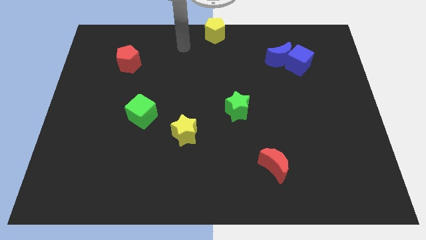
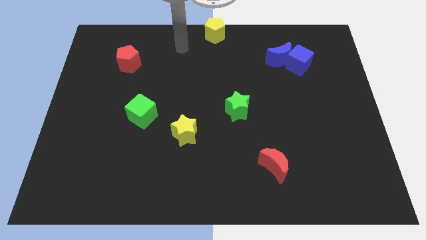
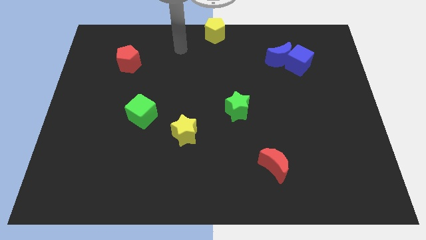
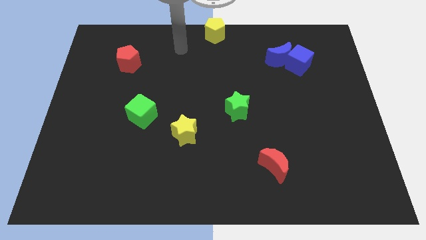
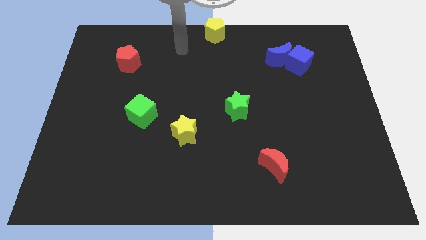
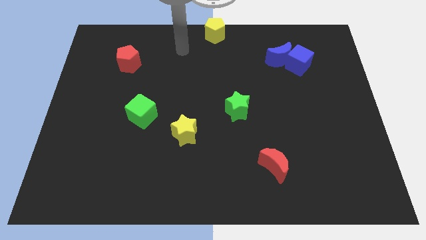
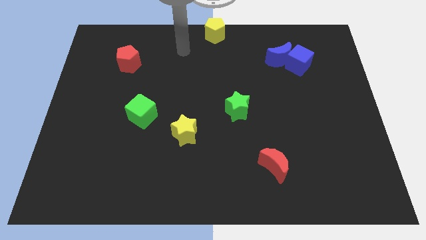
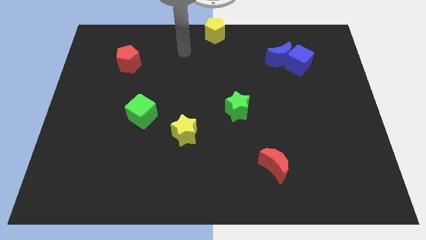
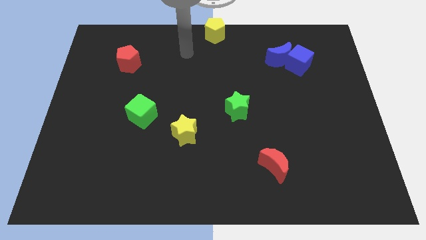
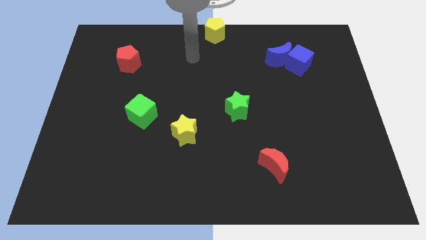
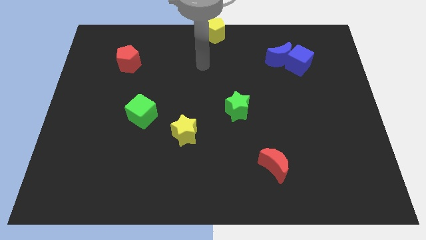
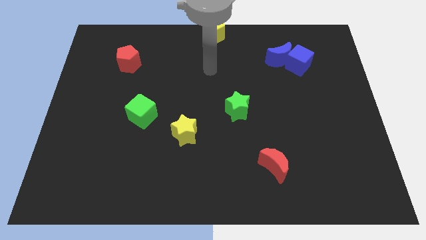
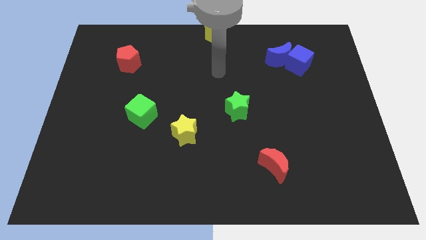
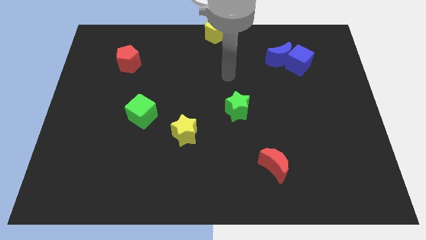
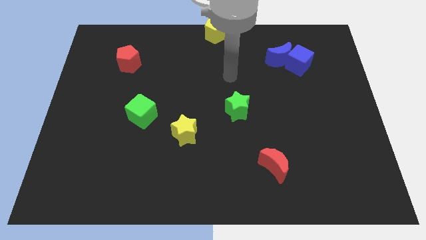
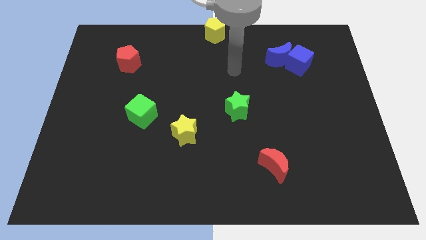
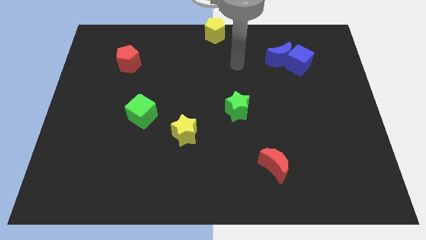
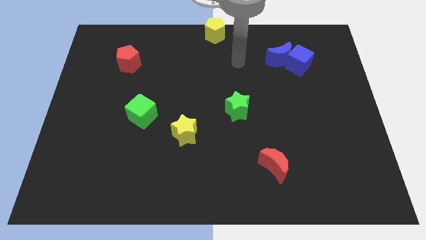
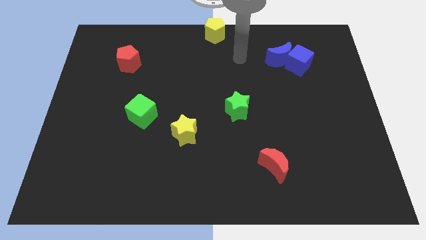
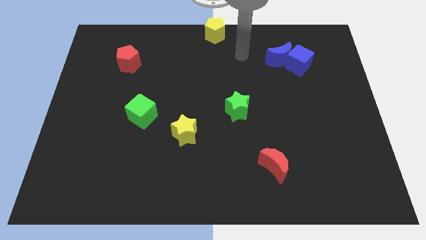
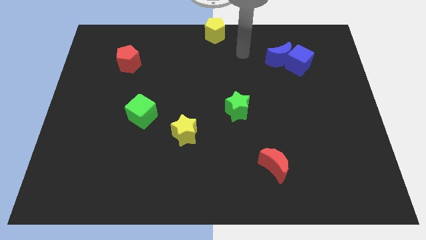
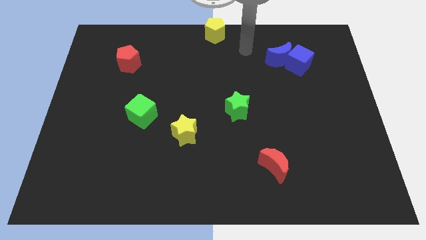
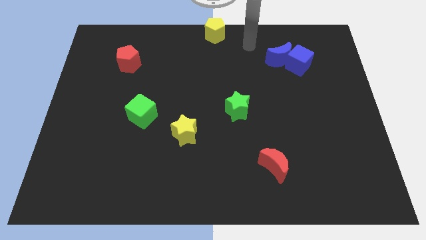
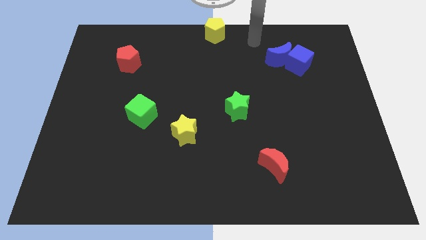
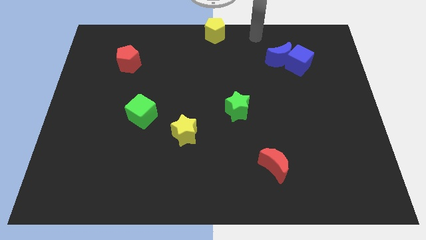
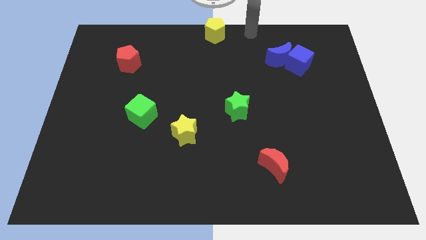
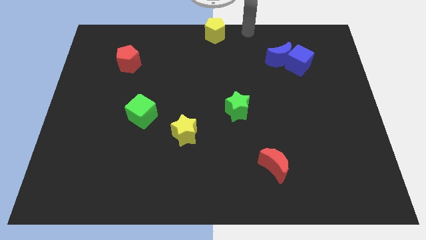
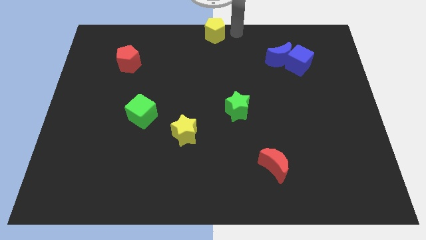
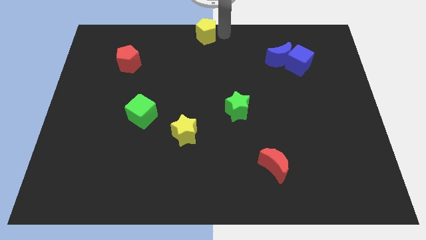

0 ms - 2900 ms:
point your arm to the right side of yellow pentagon

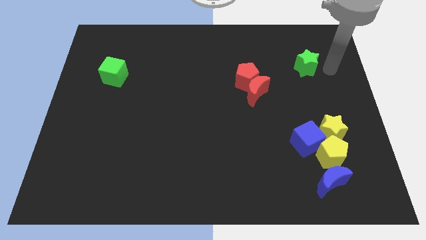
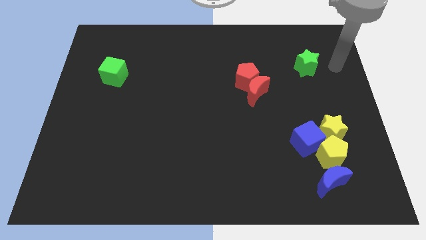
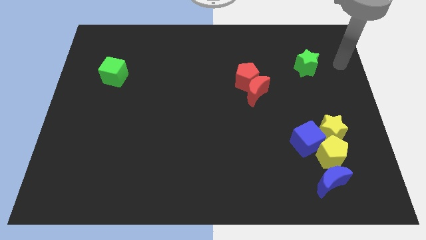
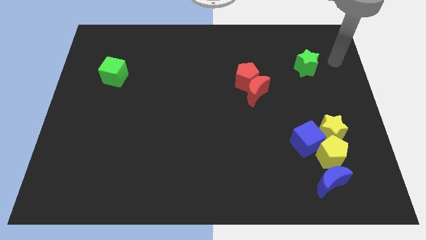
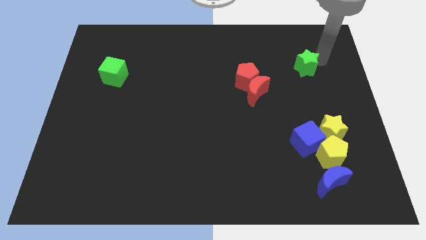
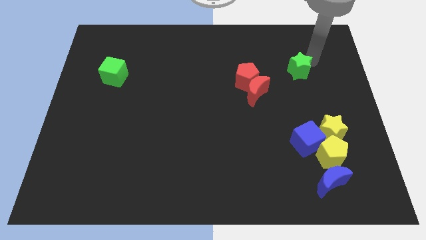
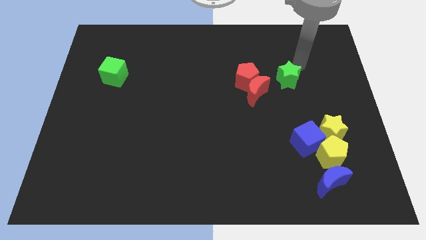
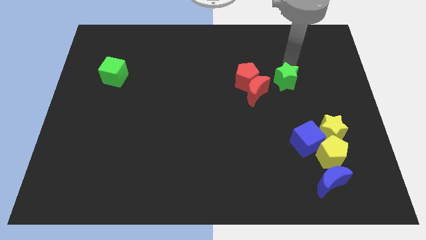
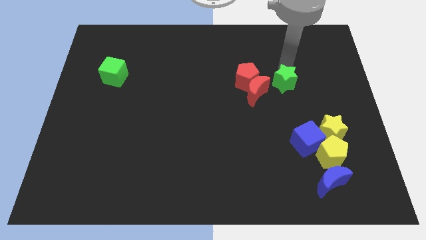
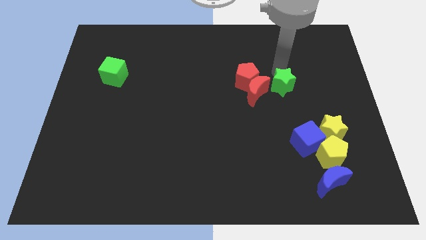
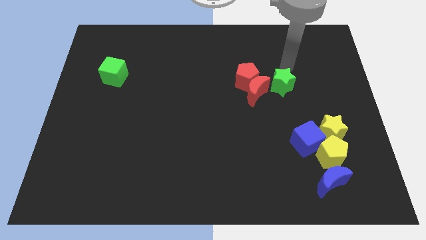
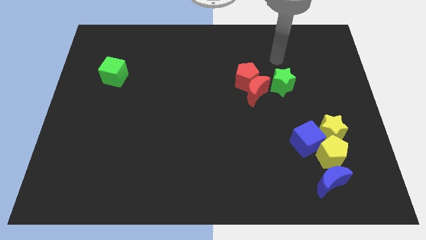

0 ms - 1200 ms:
place the green star to the top right side of the red crescent

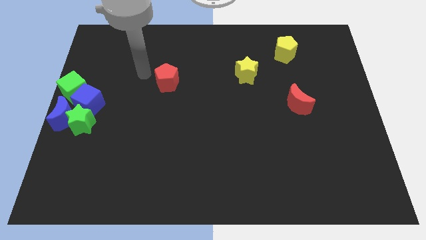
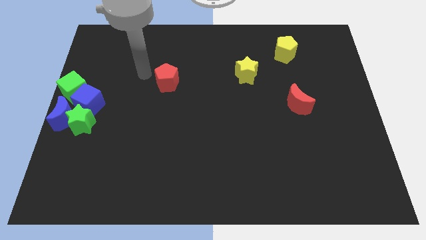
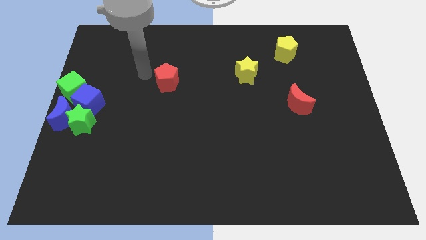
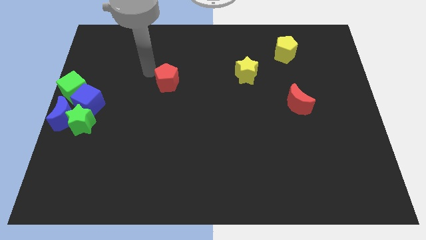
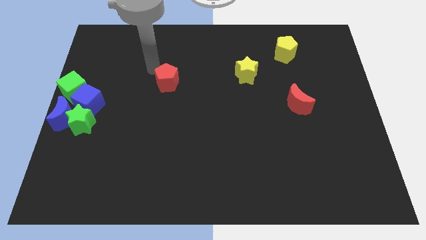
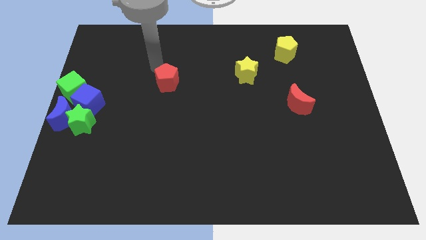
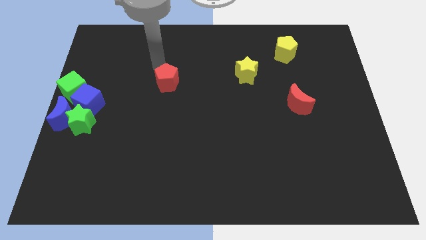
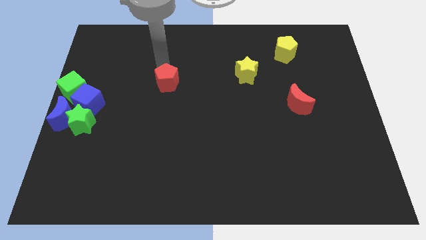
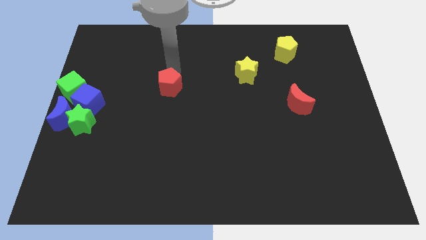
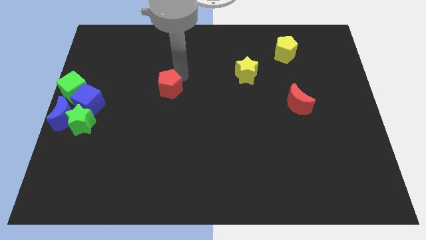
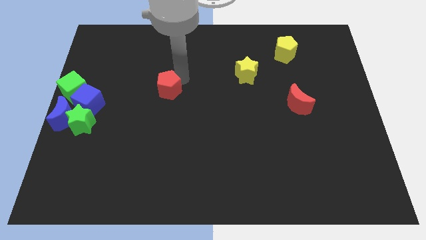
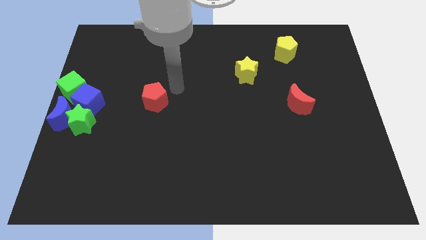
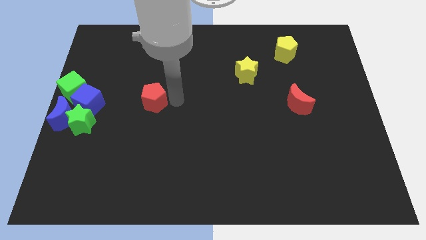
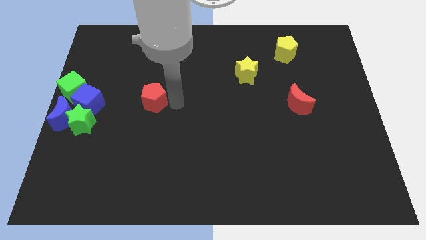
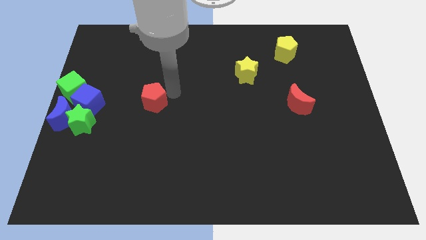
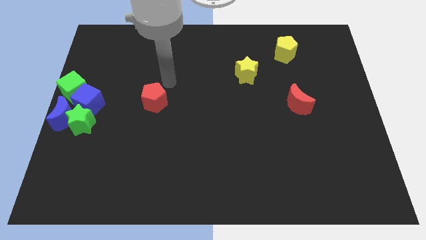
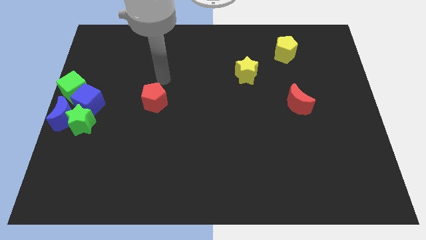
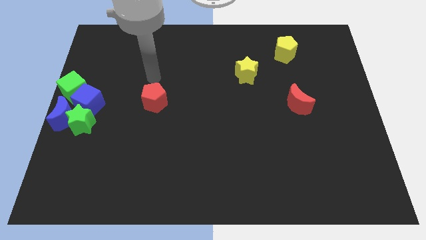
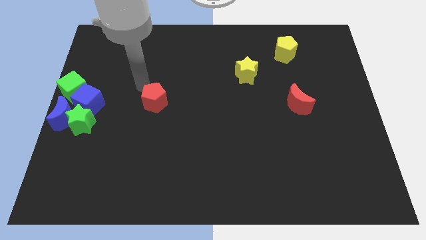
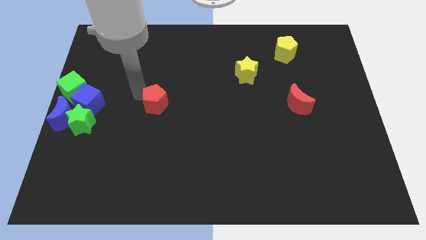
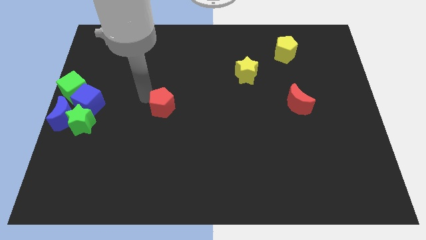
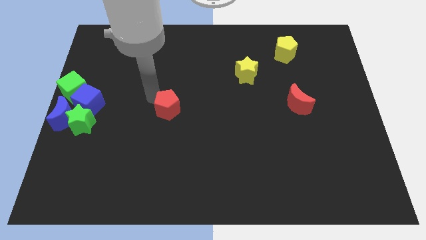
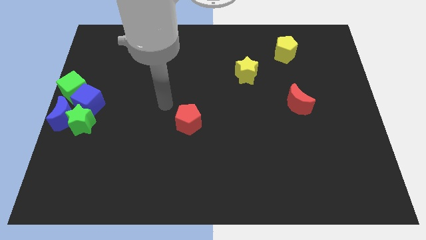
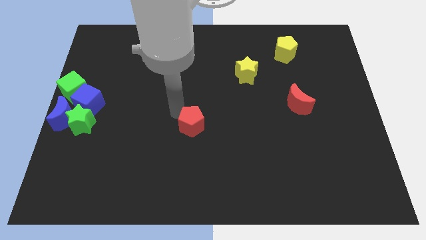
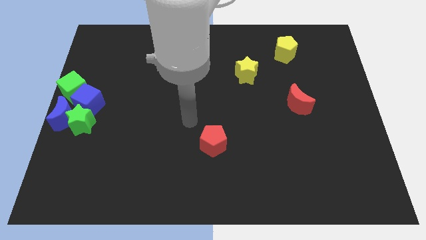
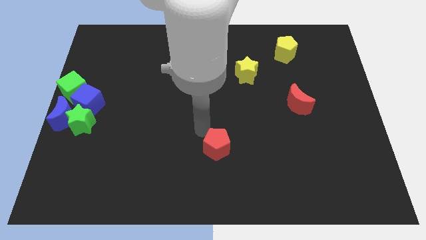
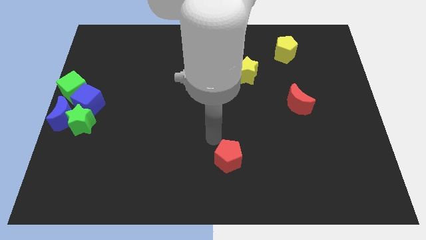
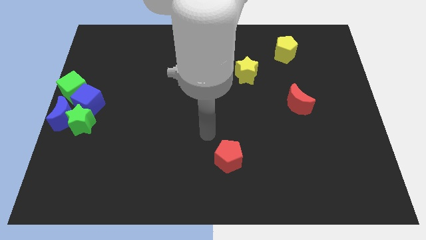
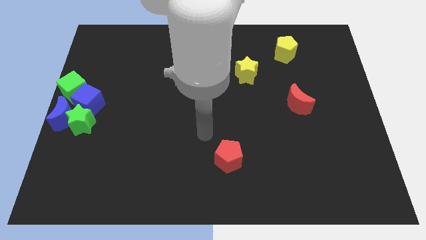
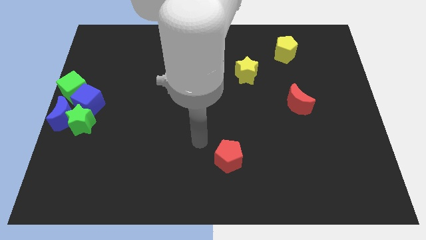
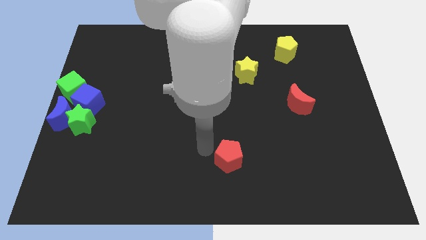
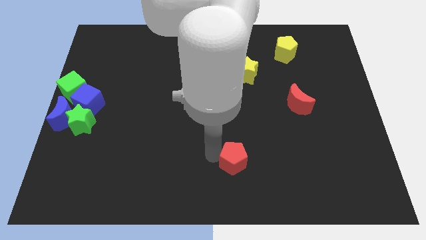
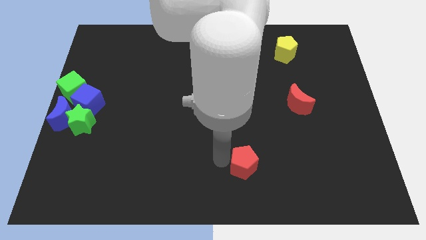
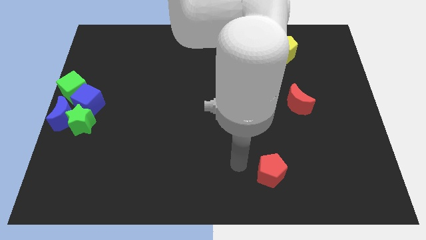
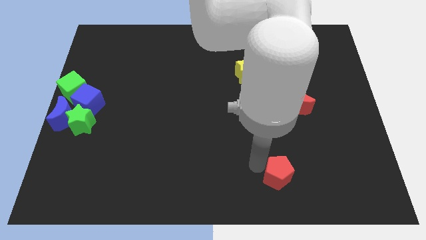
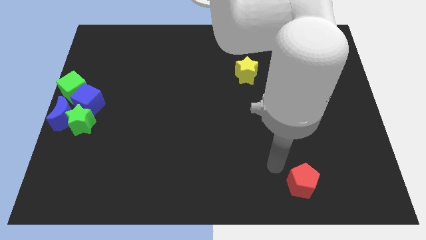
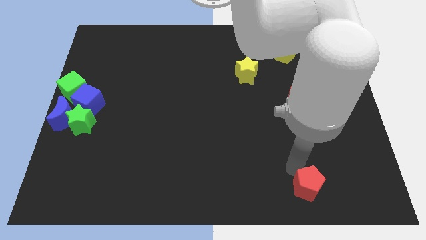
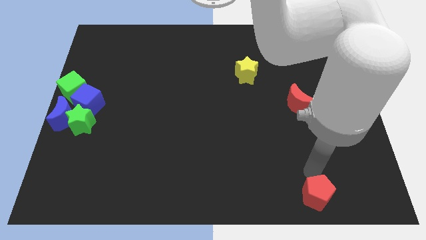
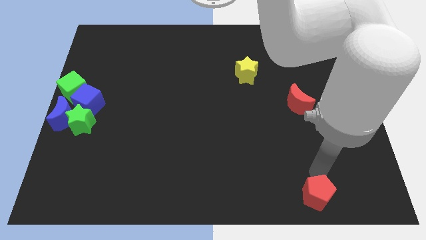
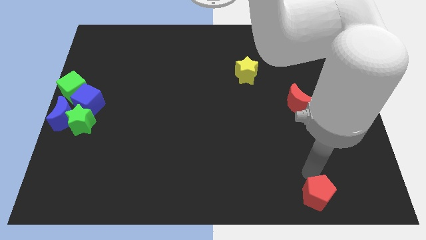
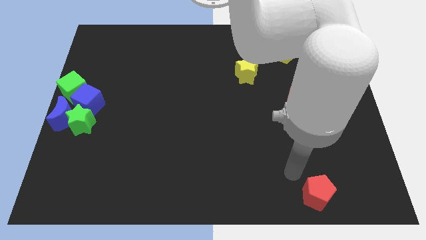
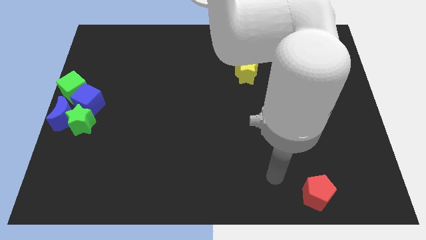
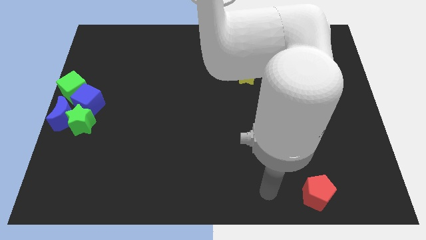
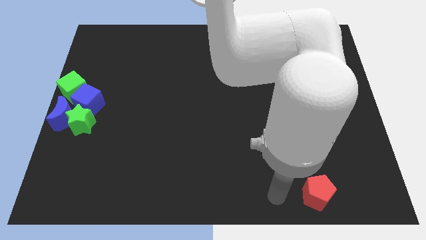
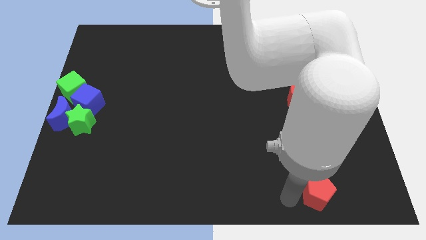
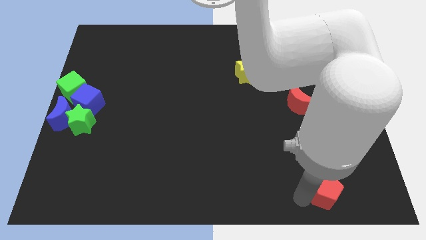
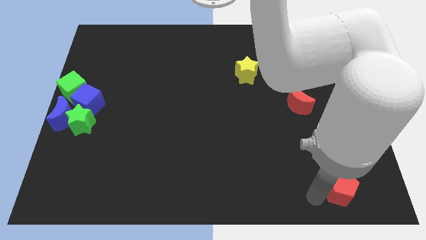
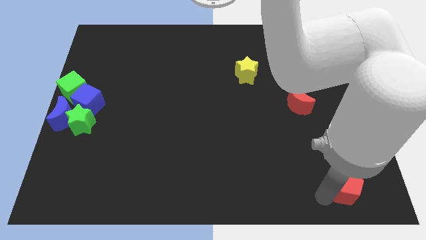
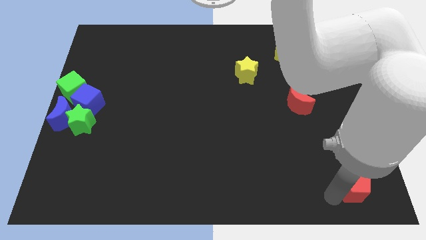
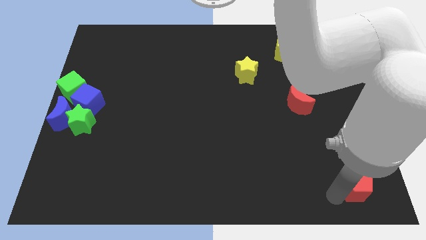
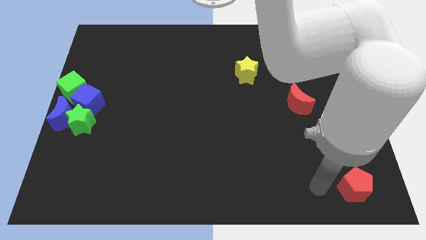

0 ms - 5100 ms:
slide red pentagon towards bottom right
